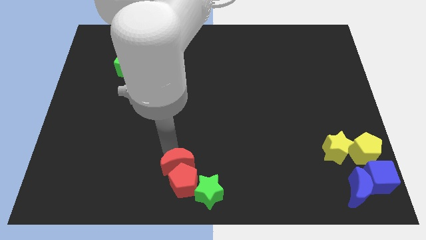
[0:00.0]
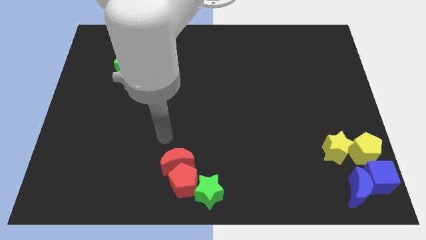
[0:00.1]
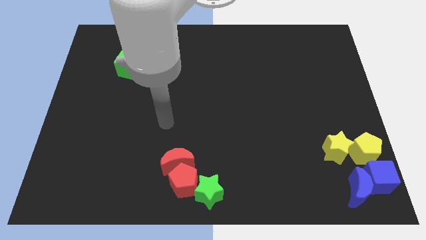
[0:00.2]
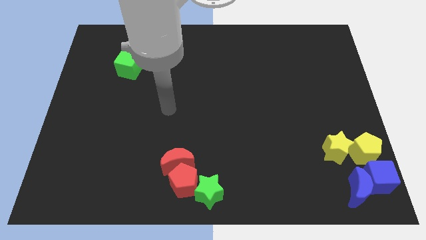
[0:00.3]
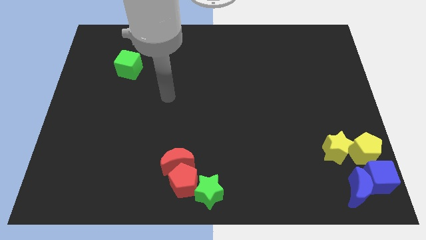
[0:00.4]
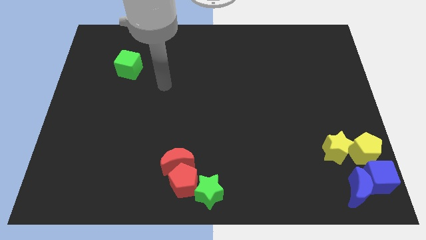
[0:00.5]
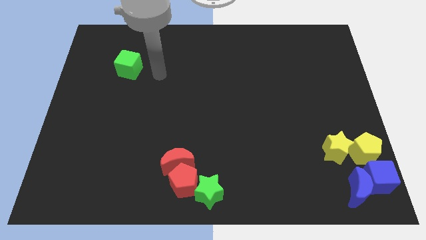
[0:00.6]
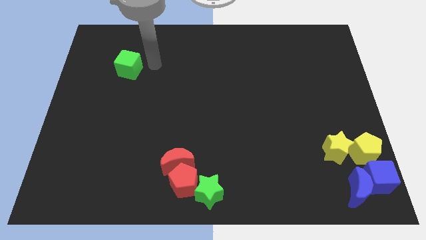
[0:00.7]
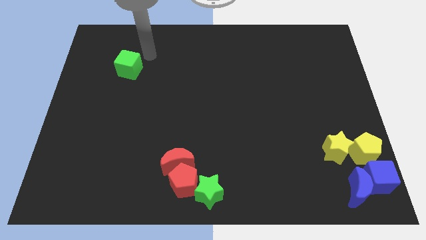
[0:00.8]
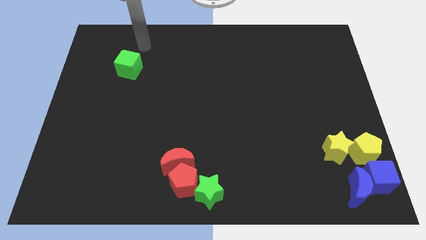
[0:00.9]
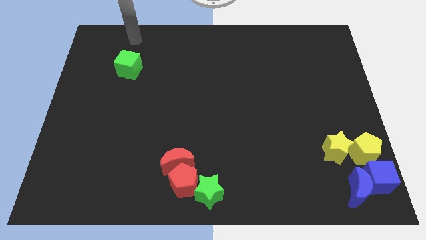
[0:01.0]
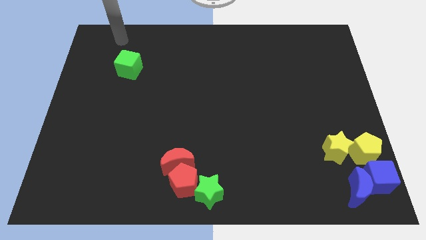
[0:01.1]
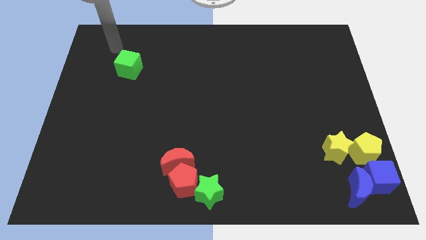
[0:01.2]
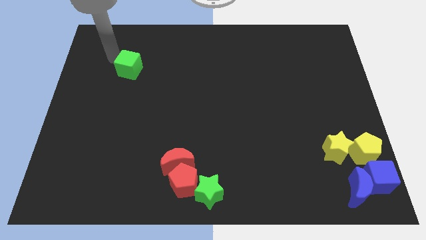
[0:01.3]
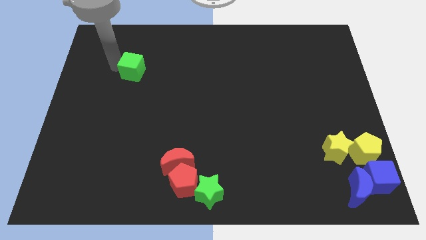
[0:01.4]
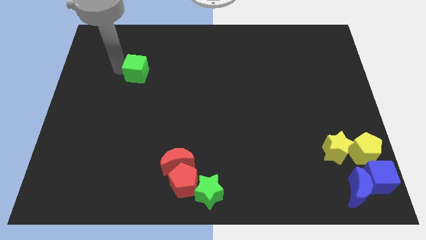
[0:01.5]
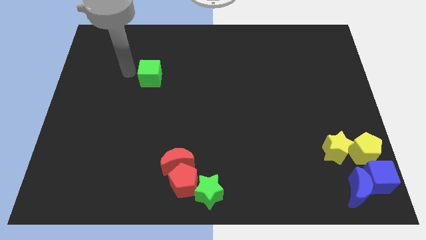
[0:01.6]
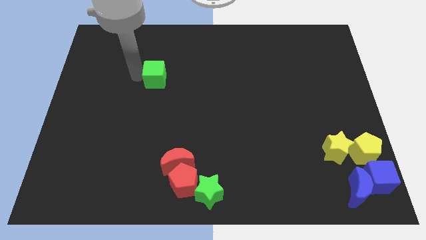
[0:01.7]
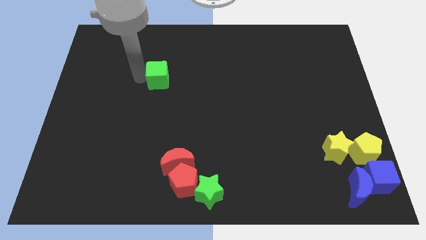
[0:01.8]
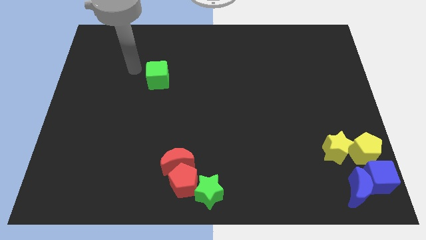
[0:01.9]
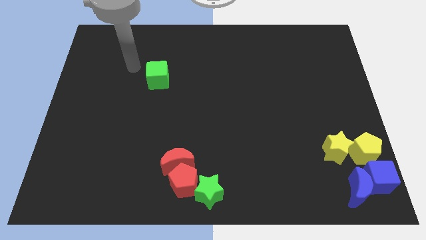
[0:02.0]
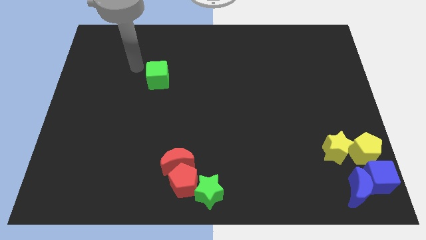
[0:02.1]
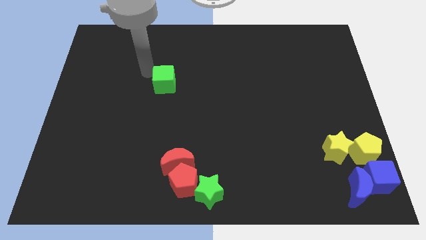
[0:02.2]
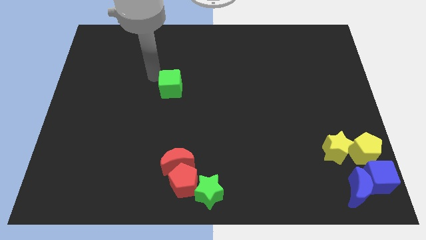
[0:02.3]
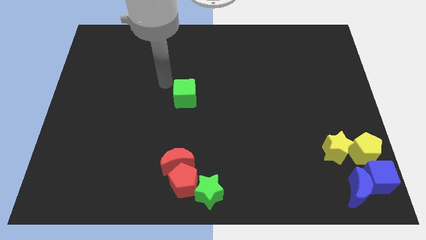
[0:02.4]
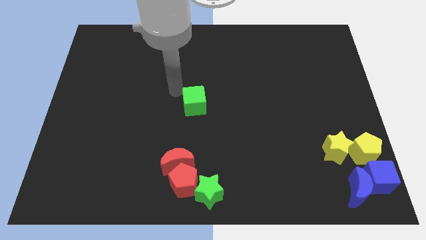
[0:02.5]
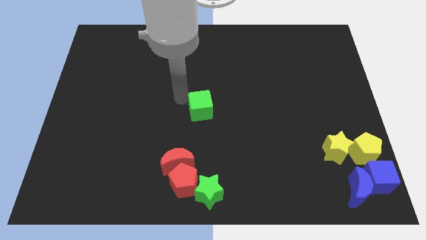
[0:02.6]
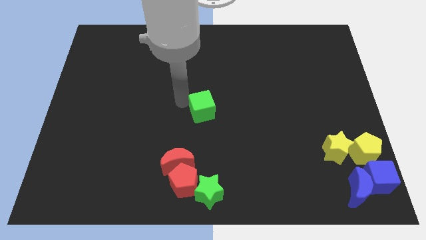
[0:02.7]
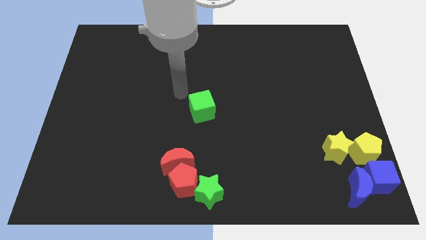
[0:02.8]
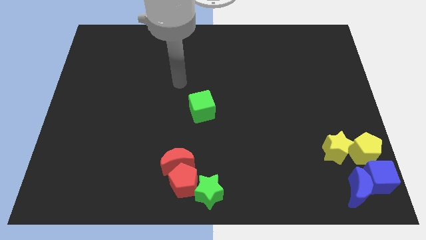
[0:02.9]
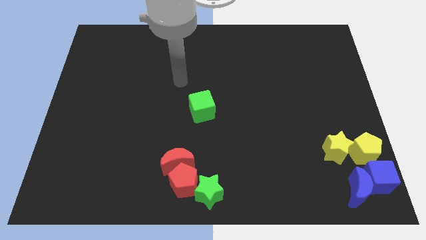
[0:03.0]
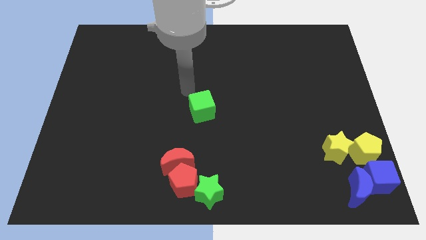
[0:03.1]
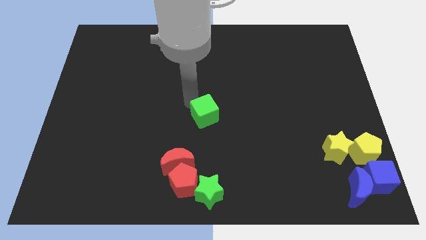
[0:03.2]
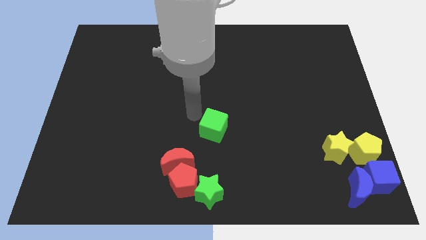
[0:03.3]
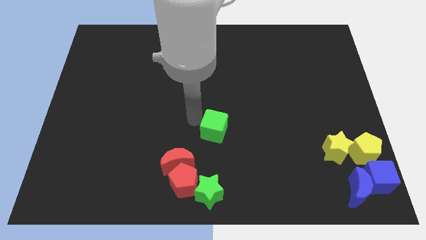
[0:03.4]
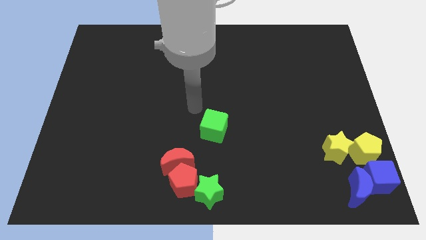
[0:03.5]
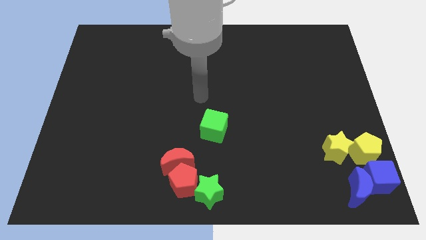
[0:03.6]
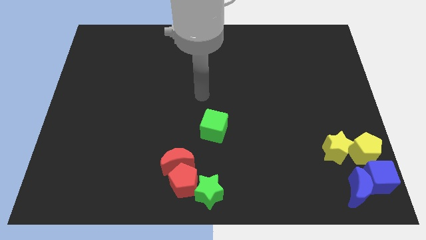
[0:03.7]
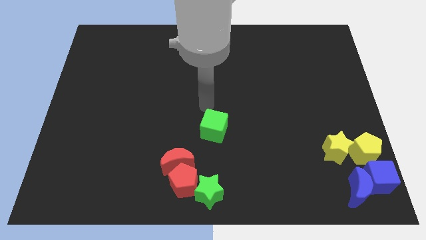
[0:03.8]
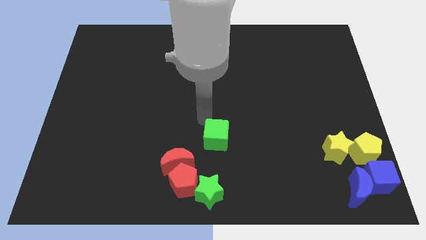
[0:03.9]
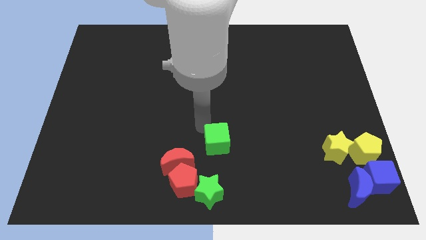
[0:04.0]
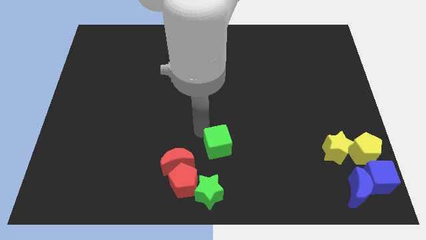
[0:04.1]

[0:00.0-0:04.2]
drag the green cube to the top right of the green star

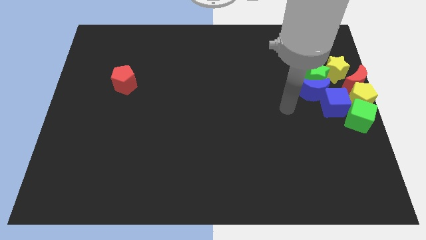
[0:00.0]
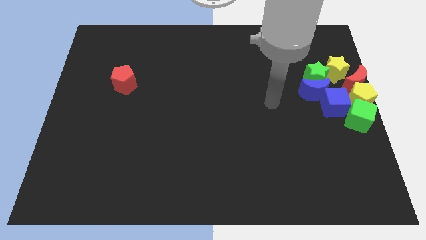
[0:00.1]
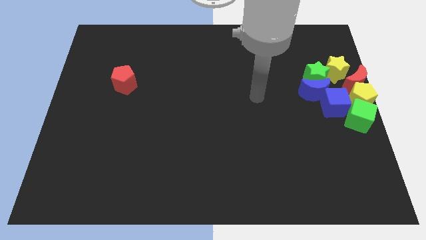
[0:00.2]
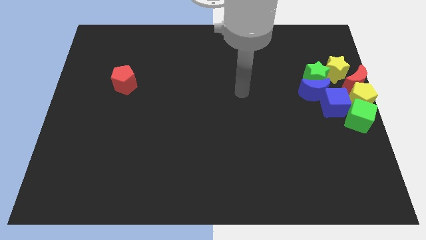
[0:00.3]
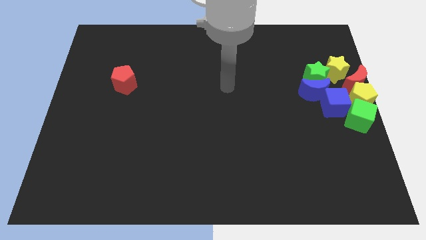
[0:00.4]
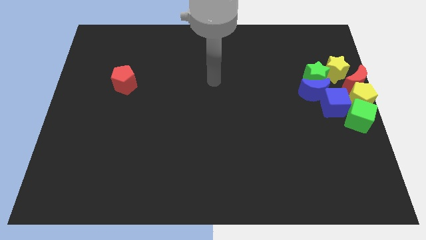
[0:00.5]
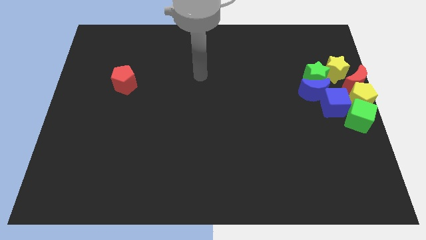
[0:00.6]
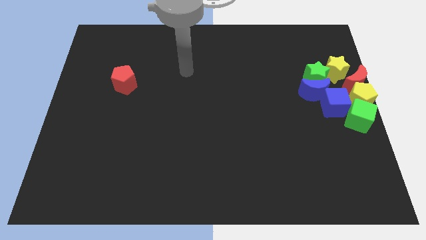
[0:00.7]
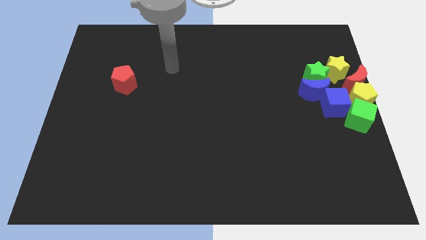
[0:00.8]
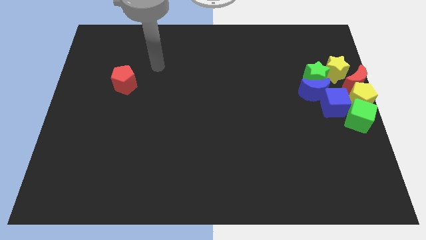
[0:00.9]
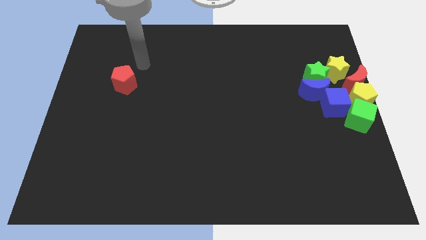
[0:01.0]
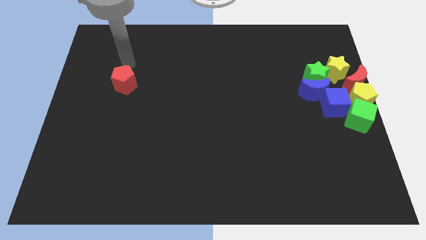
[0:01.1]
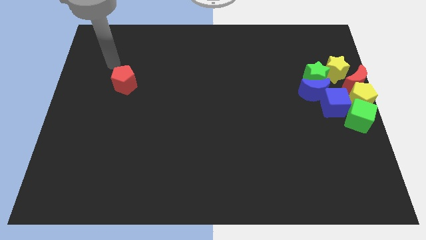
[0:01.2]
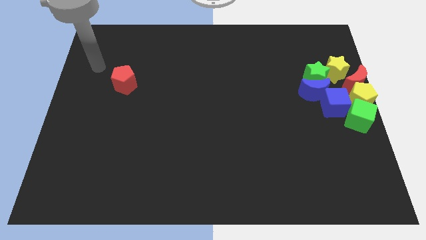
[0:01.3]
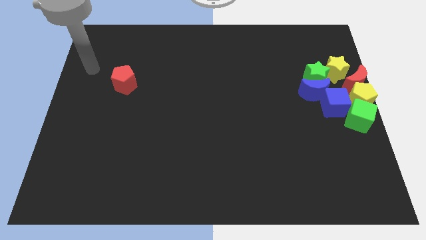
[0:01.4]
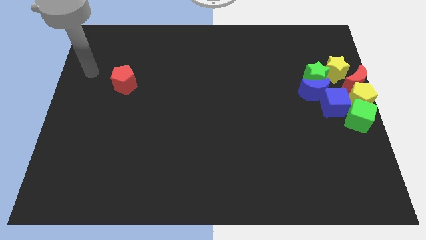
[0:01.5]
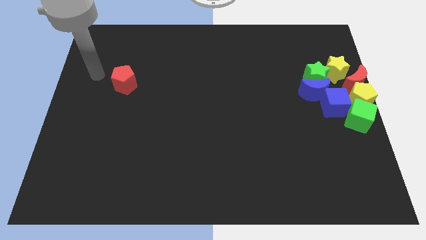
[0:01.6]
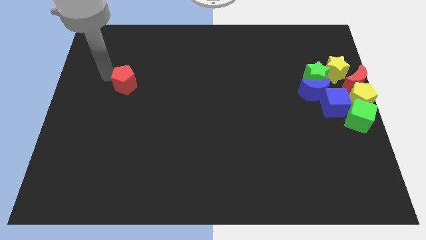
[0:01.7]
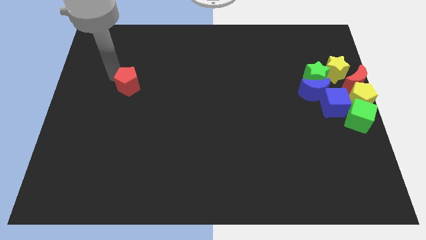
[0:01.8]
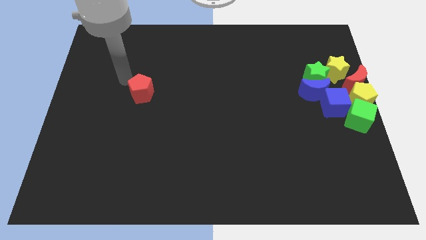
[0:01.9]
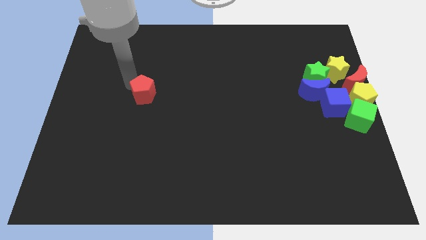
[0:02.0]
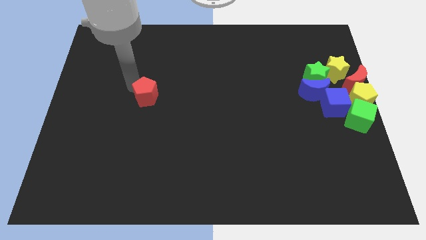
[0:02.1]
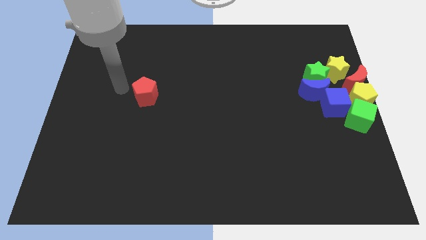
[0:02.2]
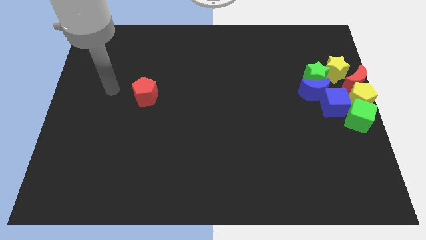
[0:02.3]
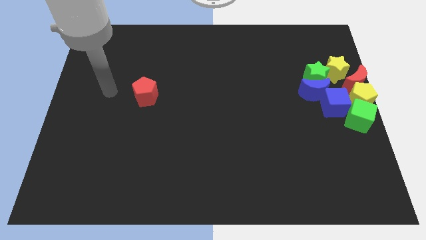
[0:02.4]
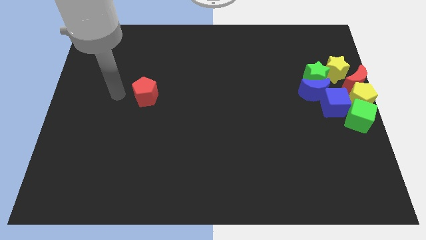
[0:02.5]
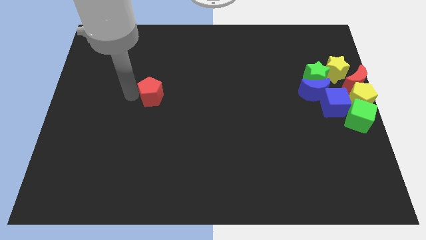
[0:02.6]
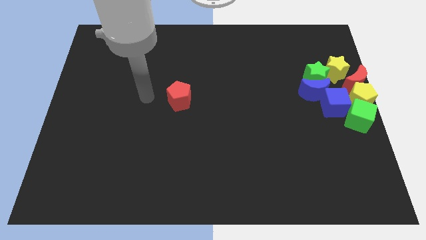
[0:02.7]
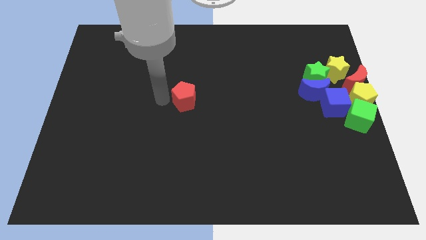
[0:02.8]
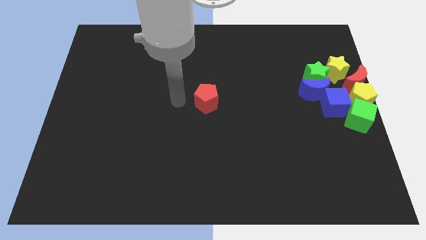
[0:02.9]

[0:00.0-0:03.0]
place red pentagon to the center of the board

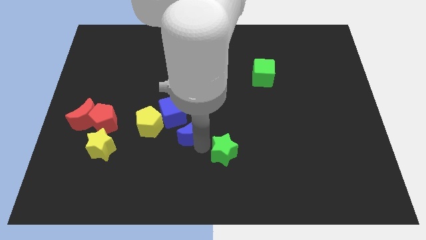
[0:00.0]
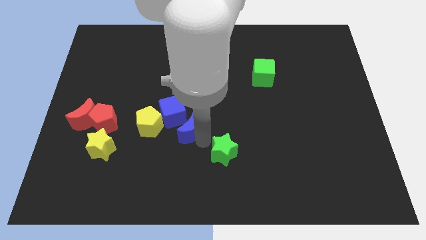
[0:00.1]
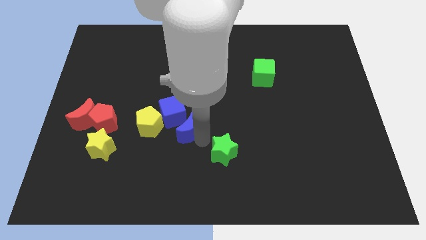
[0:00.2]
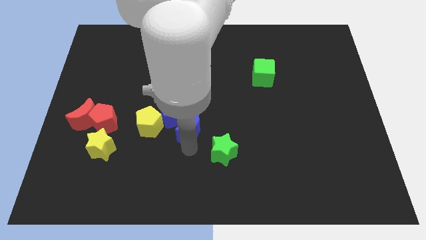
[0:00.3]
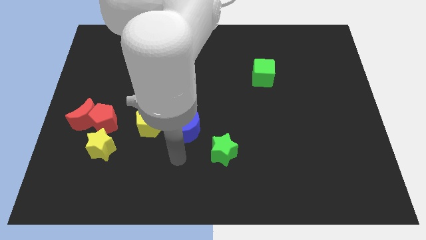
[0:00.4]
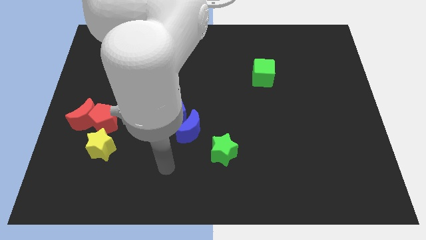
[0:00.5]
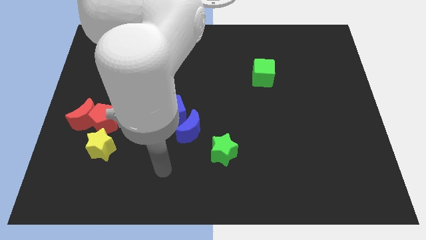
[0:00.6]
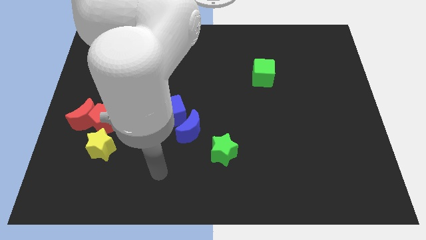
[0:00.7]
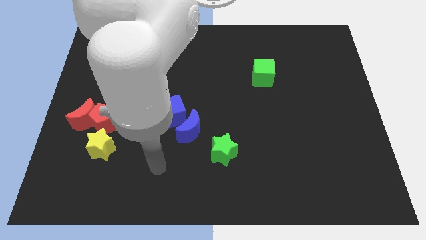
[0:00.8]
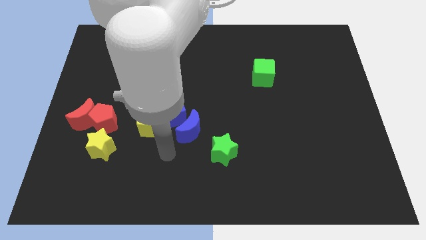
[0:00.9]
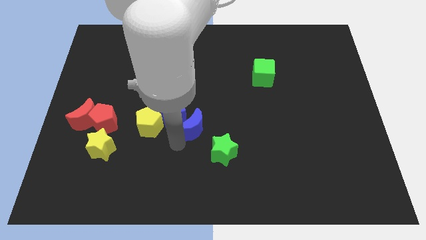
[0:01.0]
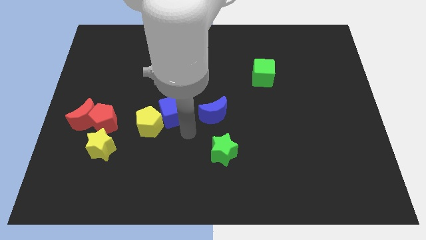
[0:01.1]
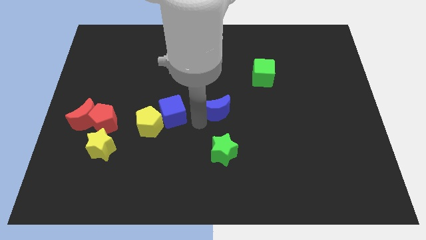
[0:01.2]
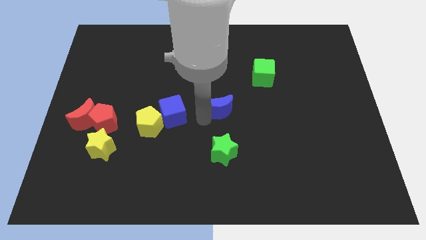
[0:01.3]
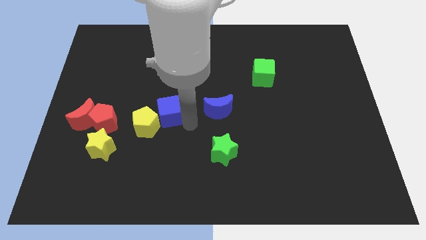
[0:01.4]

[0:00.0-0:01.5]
move the blue crescent to the center of the board

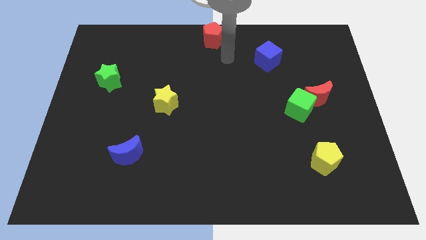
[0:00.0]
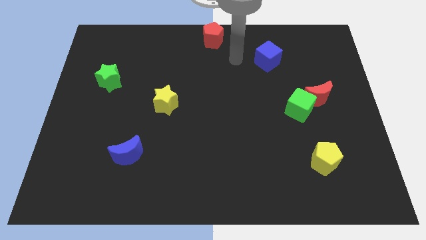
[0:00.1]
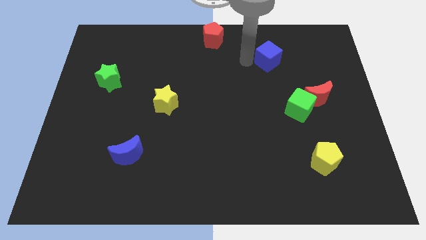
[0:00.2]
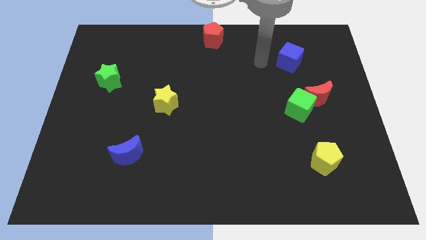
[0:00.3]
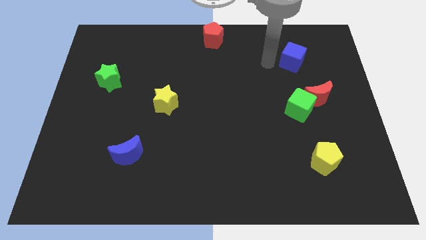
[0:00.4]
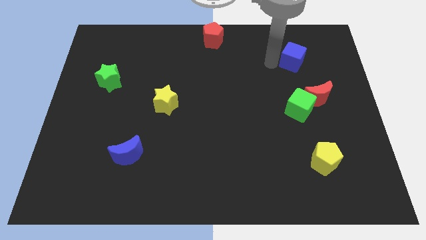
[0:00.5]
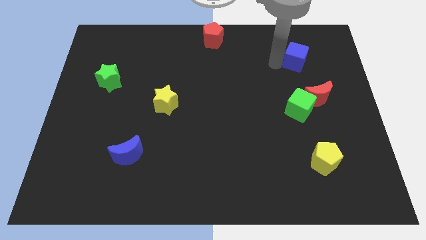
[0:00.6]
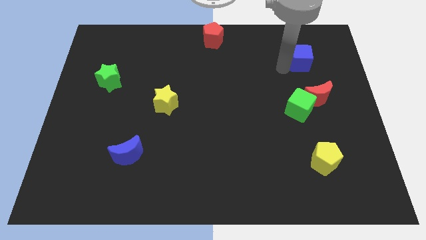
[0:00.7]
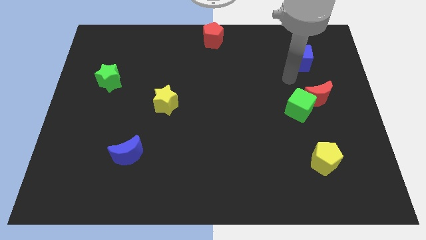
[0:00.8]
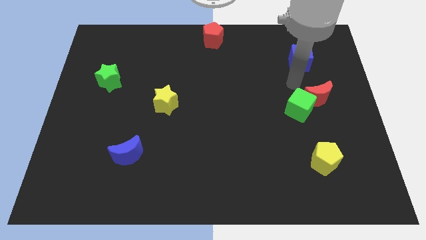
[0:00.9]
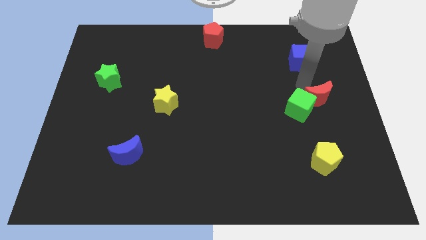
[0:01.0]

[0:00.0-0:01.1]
push the blue cube towards the right side of the board
